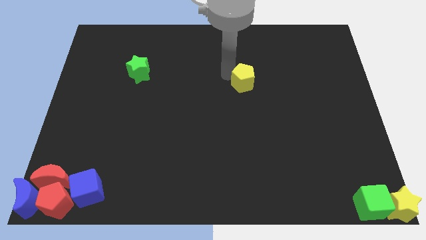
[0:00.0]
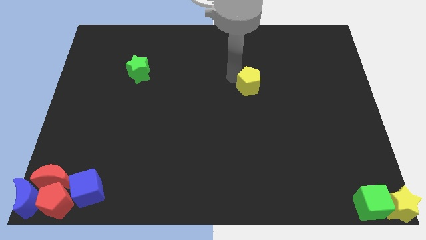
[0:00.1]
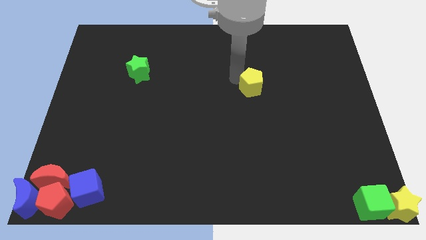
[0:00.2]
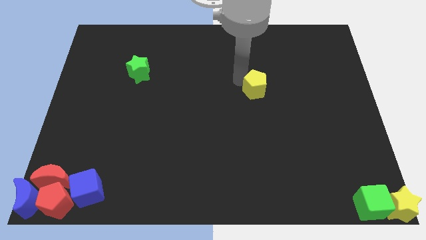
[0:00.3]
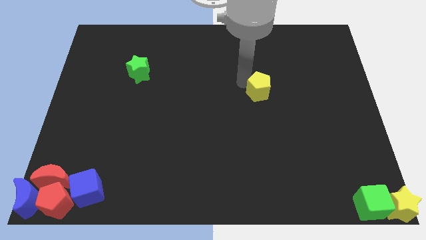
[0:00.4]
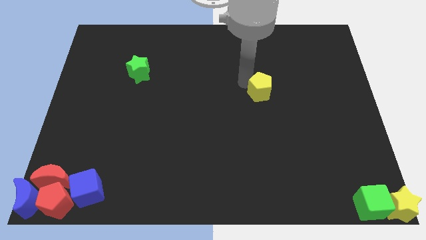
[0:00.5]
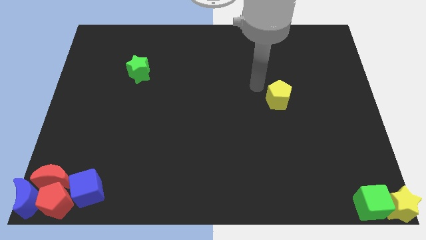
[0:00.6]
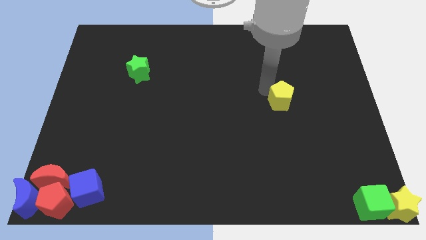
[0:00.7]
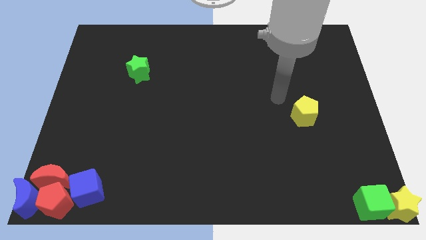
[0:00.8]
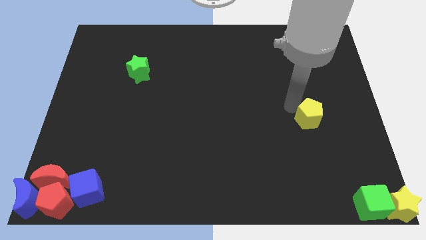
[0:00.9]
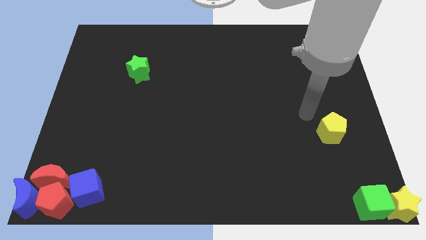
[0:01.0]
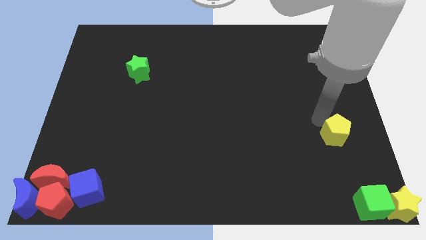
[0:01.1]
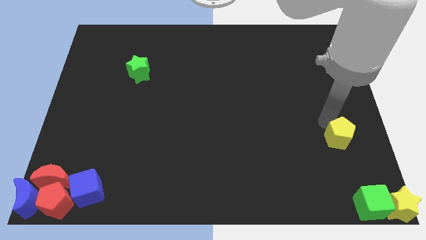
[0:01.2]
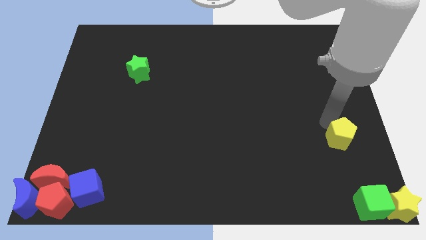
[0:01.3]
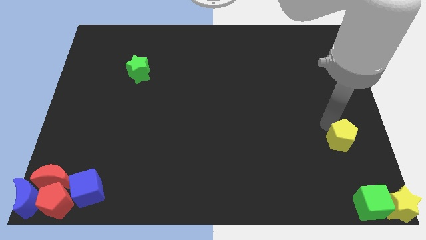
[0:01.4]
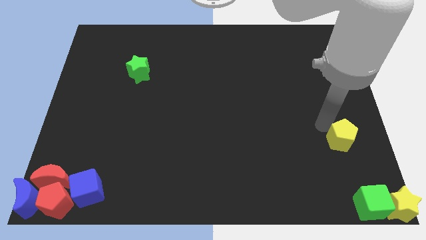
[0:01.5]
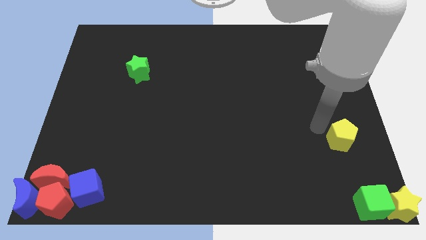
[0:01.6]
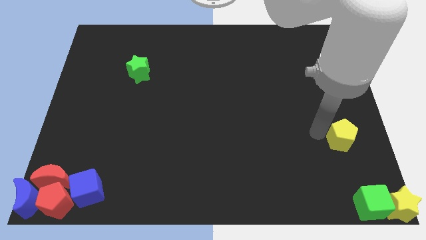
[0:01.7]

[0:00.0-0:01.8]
move the yellow pentagon diagonally down

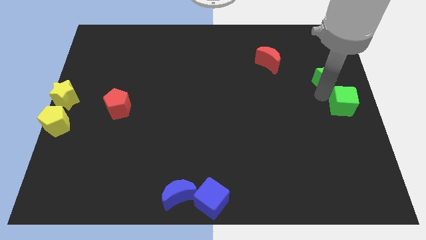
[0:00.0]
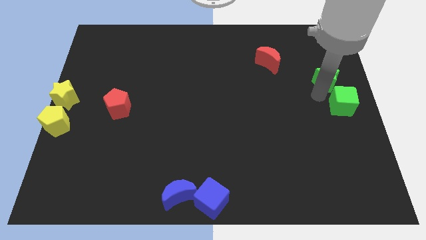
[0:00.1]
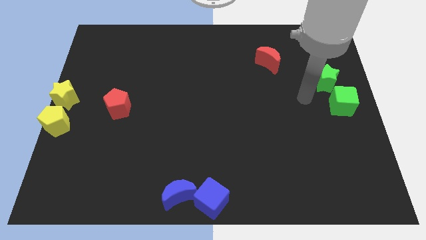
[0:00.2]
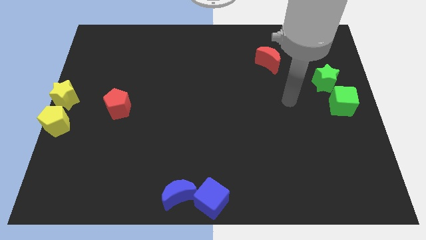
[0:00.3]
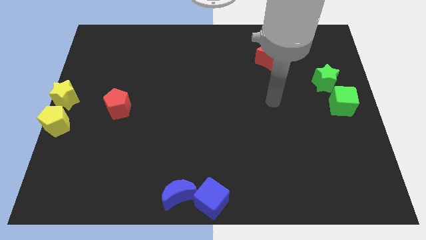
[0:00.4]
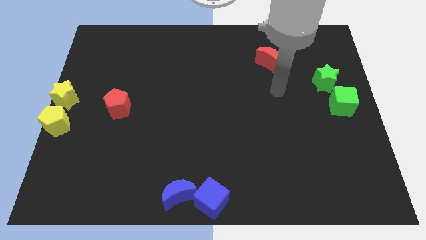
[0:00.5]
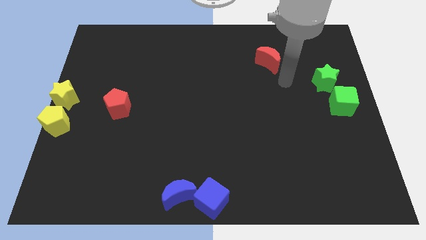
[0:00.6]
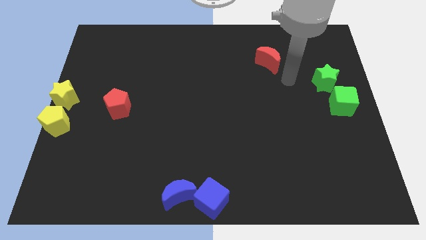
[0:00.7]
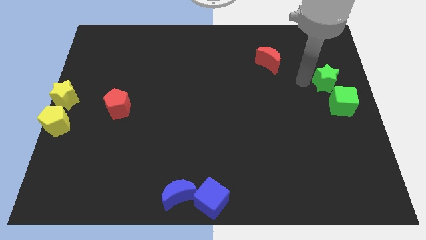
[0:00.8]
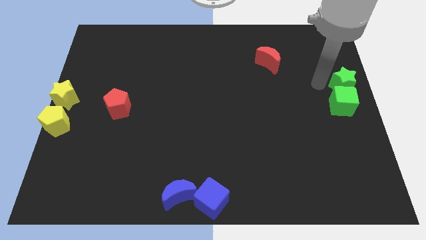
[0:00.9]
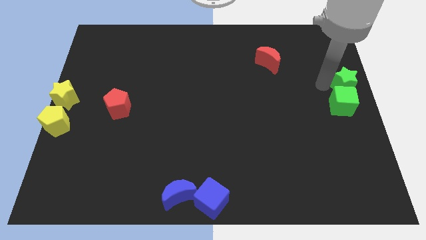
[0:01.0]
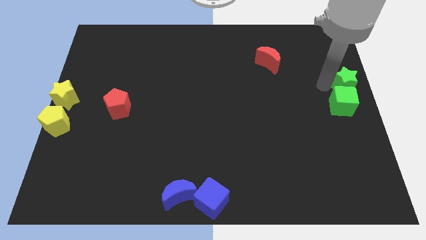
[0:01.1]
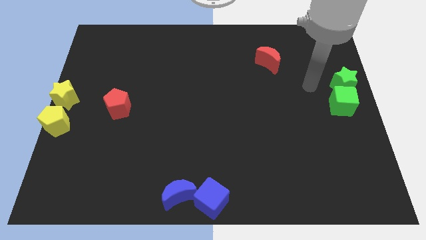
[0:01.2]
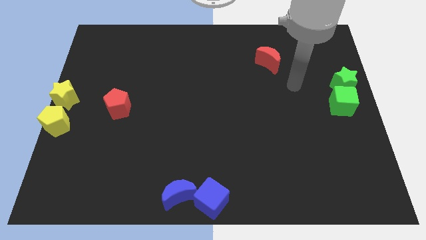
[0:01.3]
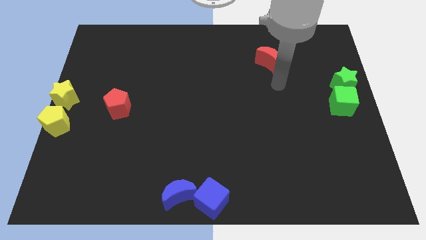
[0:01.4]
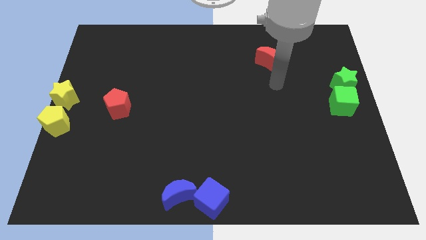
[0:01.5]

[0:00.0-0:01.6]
move green star above green cube

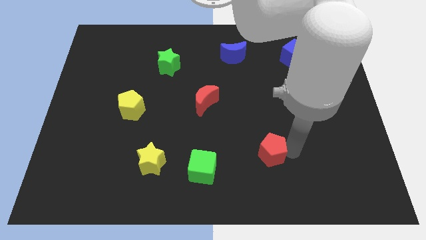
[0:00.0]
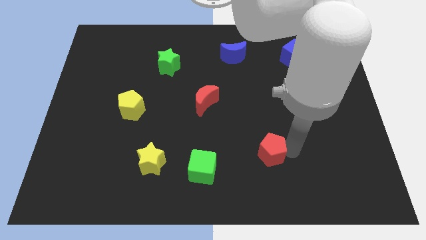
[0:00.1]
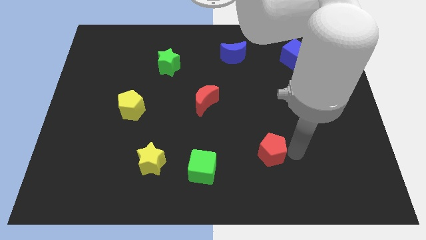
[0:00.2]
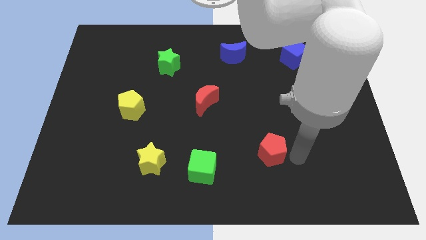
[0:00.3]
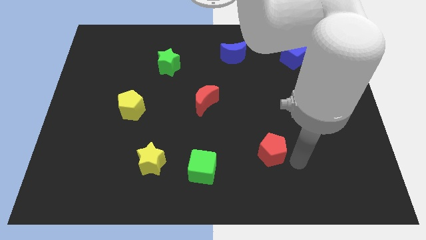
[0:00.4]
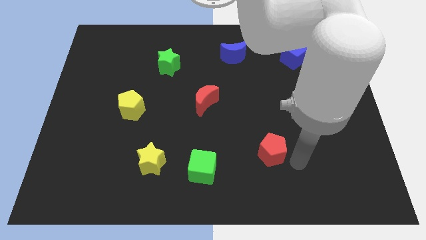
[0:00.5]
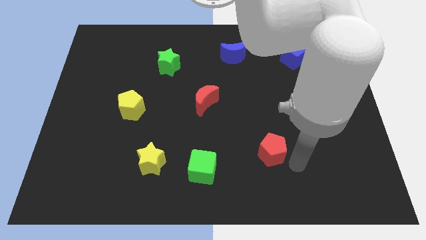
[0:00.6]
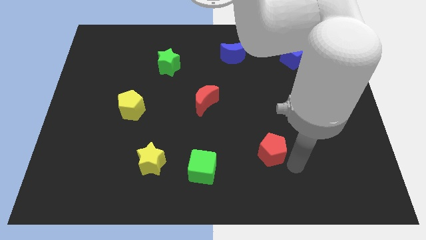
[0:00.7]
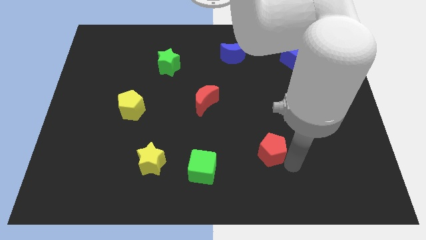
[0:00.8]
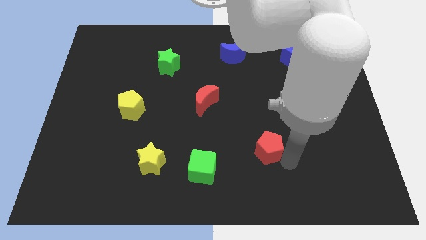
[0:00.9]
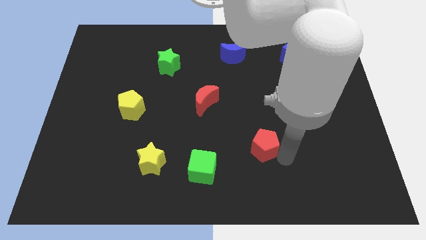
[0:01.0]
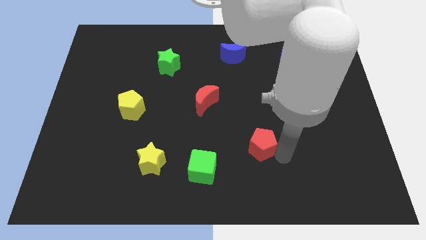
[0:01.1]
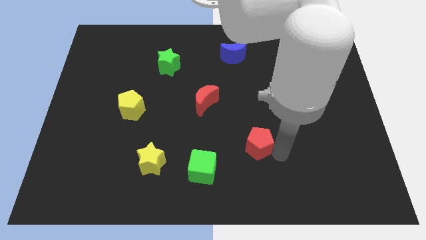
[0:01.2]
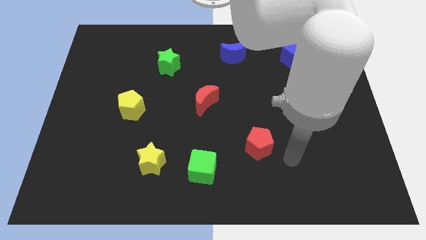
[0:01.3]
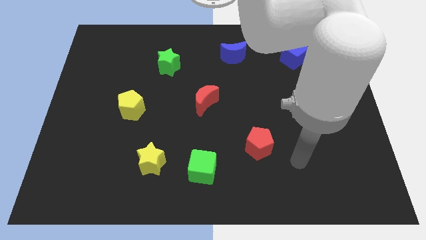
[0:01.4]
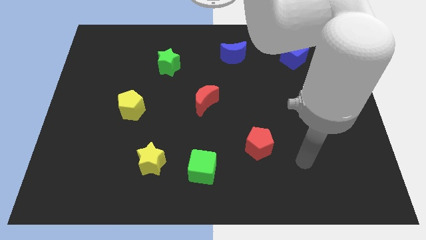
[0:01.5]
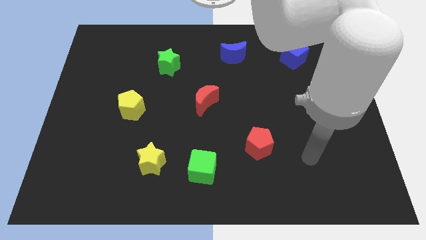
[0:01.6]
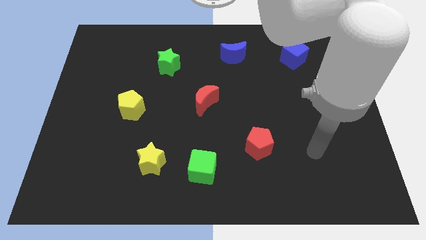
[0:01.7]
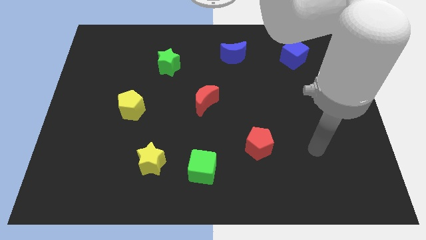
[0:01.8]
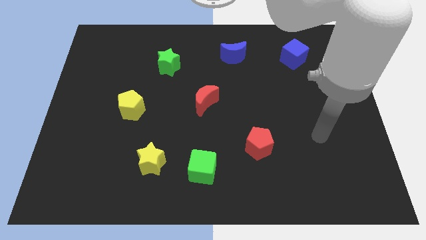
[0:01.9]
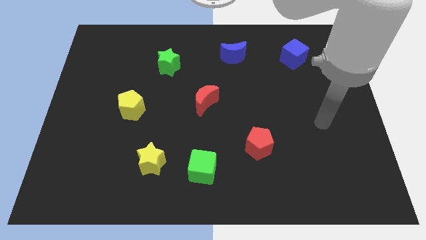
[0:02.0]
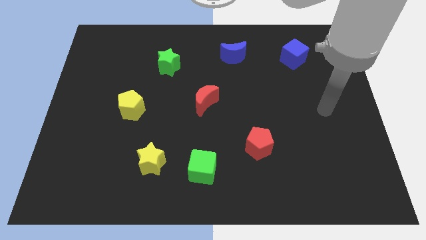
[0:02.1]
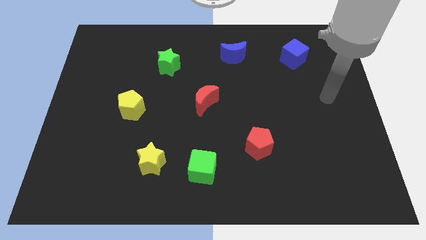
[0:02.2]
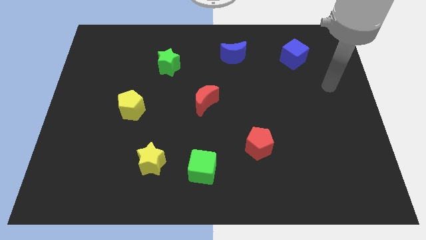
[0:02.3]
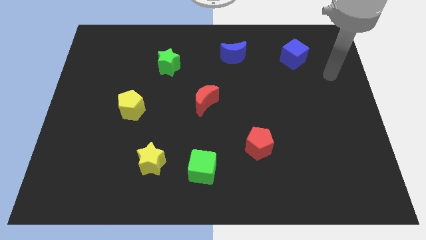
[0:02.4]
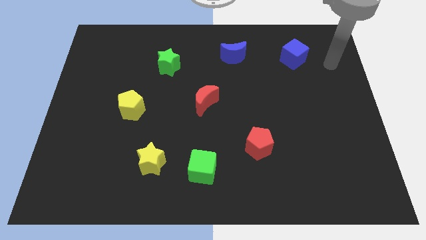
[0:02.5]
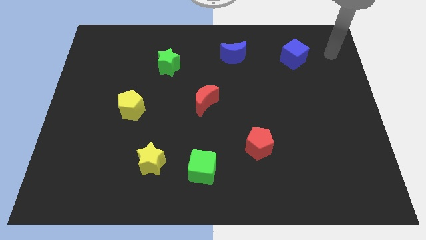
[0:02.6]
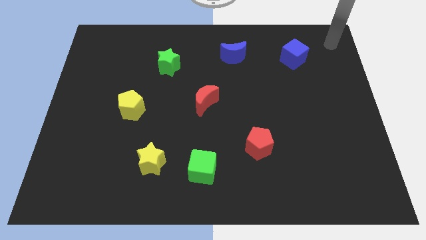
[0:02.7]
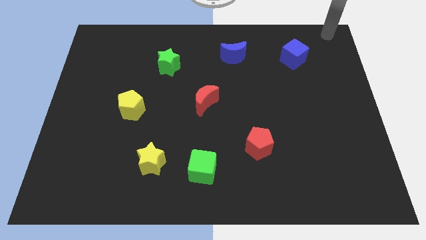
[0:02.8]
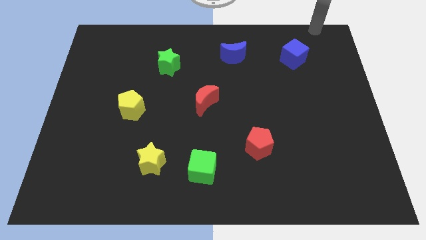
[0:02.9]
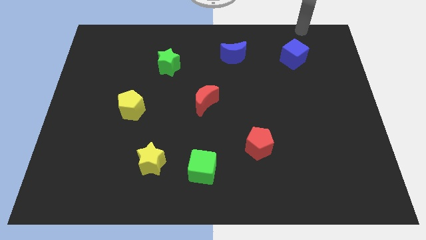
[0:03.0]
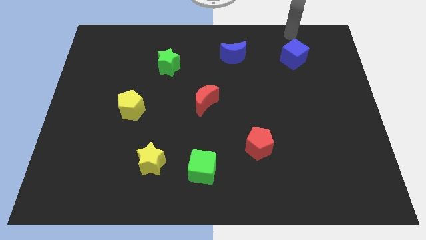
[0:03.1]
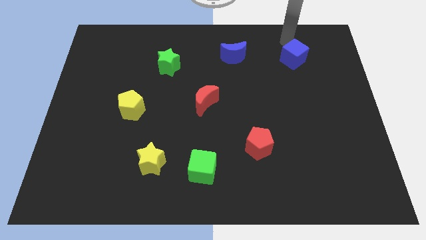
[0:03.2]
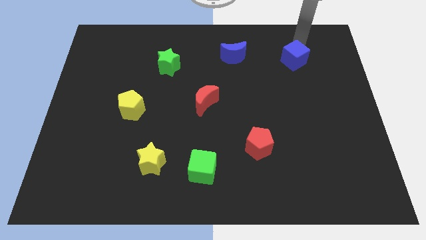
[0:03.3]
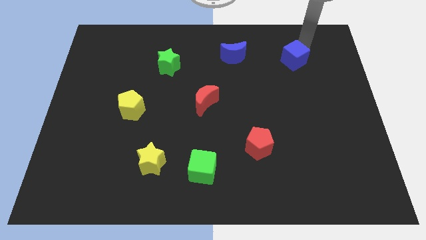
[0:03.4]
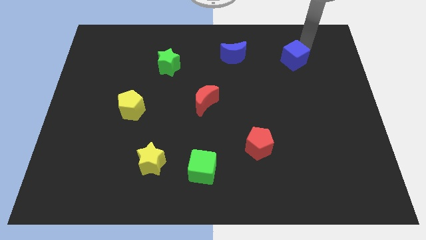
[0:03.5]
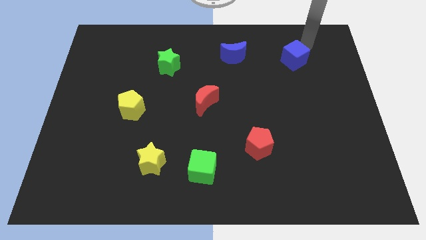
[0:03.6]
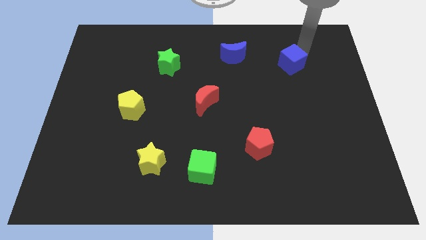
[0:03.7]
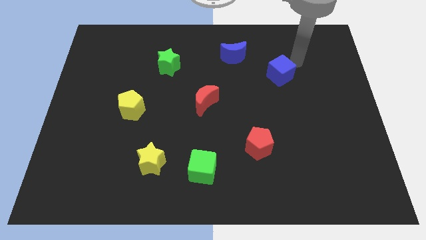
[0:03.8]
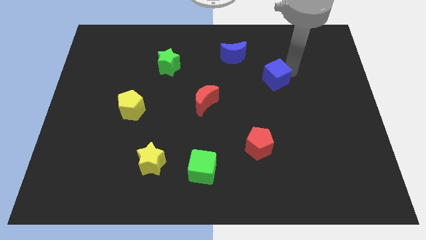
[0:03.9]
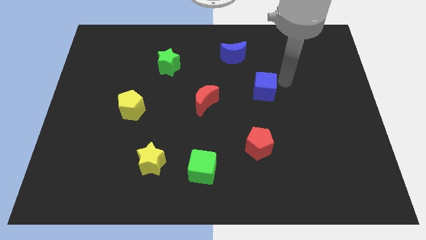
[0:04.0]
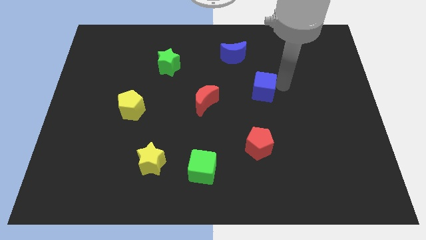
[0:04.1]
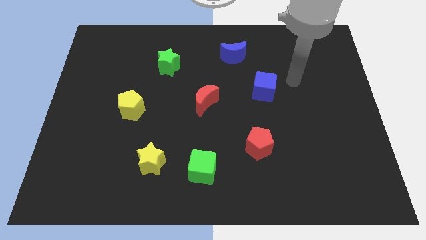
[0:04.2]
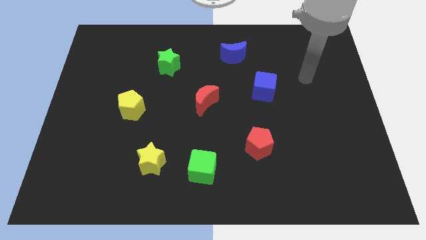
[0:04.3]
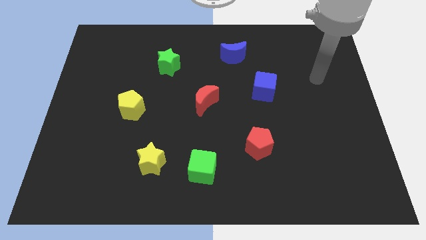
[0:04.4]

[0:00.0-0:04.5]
push the blue cube vertically above red pentagon

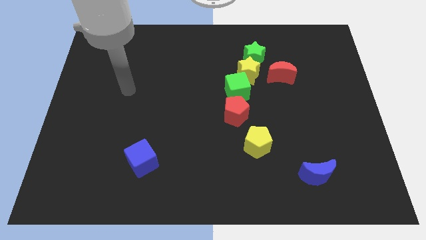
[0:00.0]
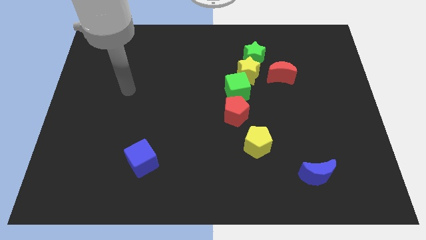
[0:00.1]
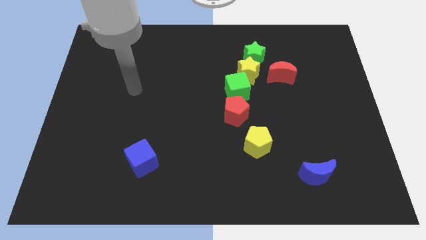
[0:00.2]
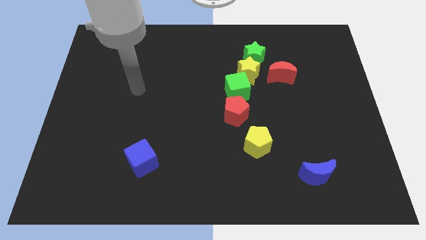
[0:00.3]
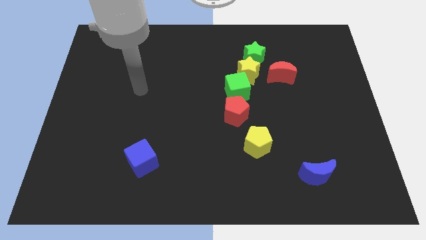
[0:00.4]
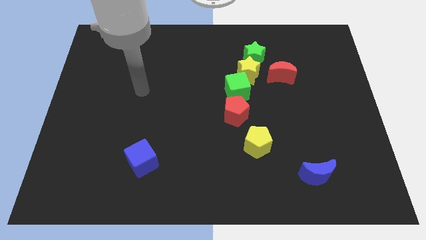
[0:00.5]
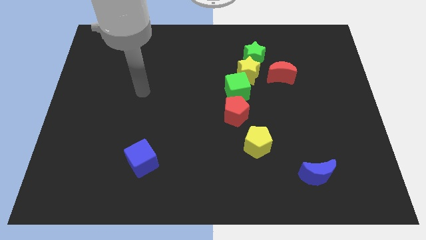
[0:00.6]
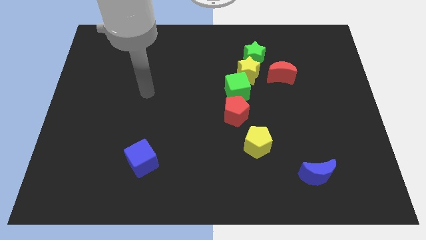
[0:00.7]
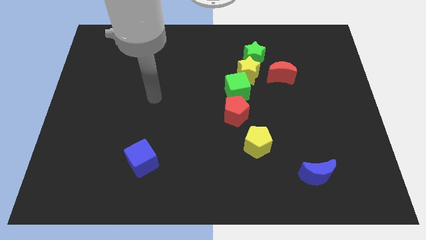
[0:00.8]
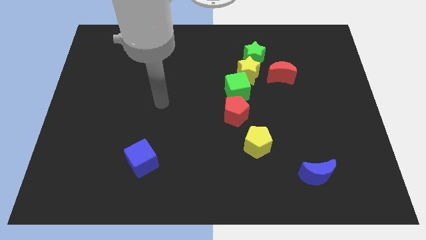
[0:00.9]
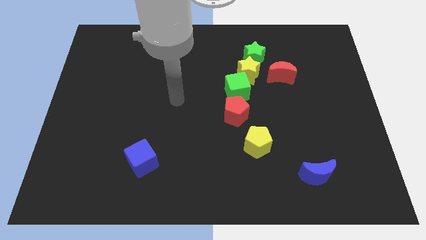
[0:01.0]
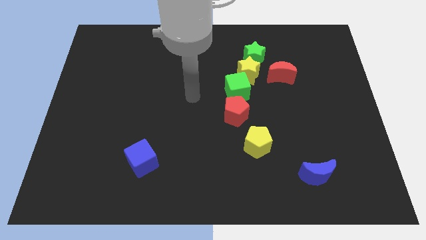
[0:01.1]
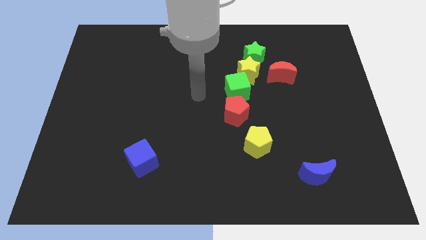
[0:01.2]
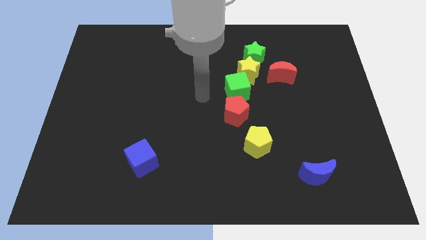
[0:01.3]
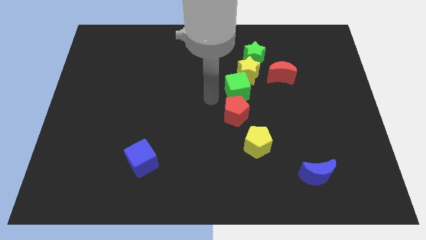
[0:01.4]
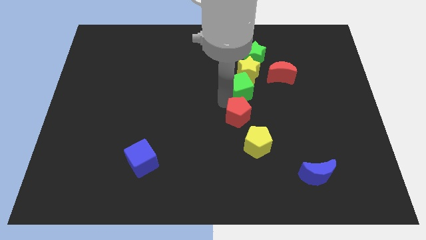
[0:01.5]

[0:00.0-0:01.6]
move your arm to the left of green cube
